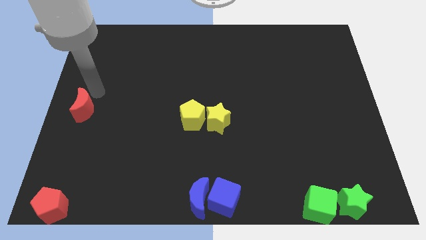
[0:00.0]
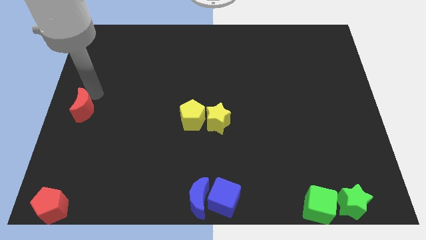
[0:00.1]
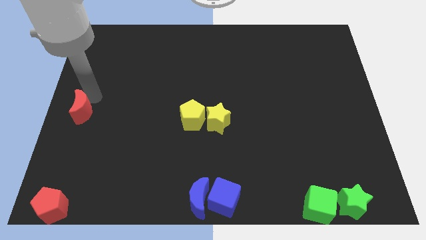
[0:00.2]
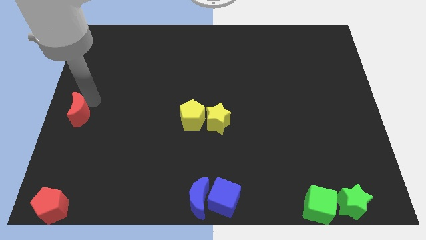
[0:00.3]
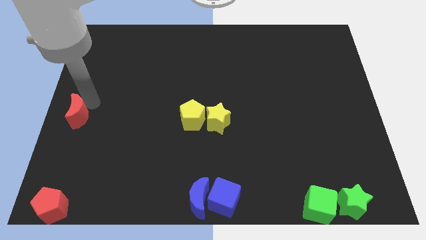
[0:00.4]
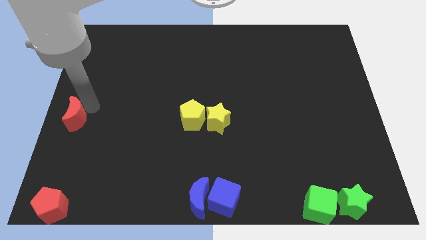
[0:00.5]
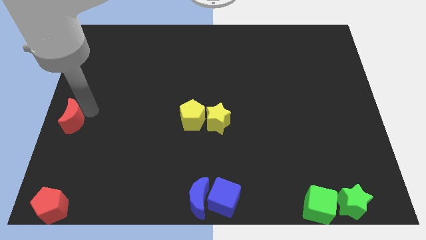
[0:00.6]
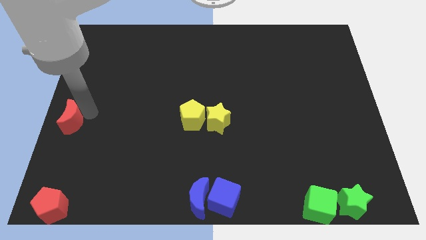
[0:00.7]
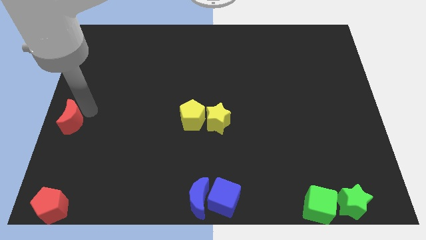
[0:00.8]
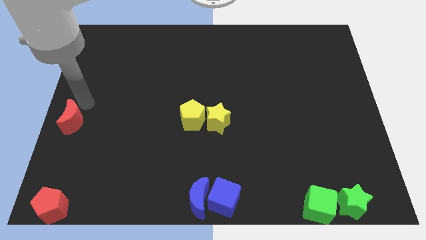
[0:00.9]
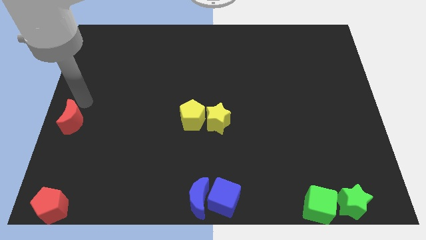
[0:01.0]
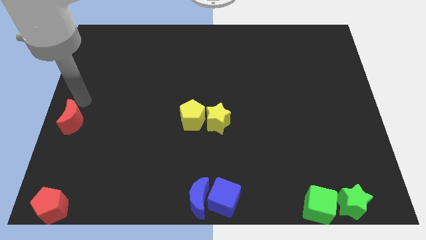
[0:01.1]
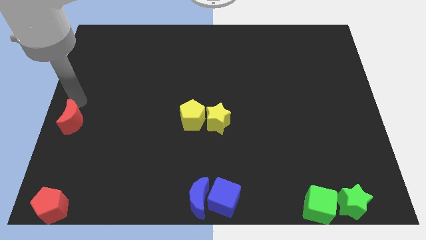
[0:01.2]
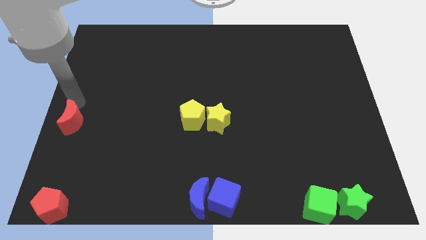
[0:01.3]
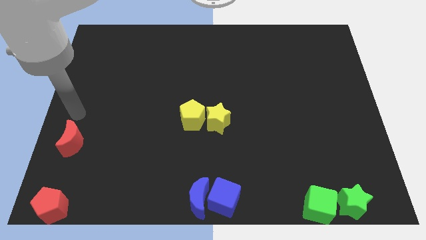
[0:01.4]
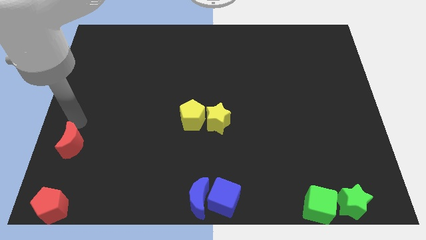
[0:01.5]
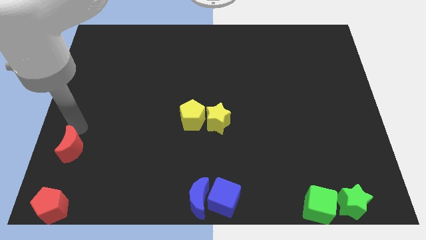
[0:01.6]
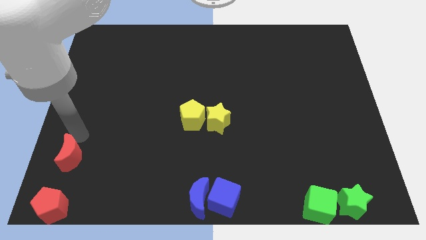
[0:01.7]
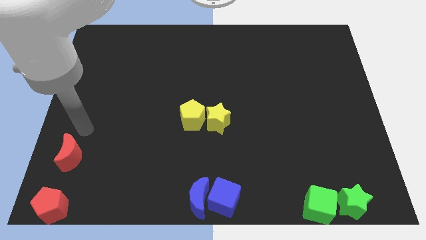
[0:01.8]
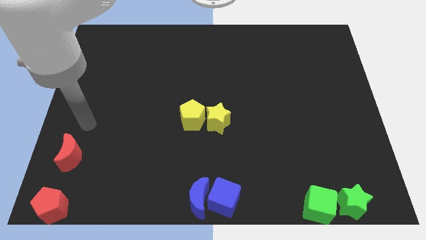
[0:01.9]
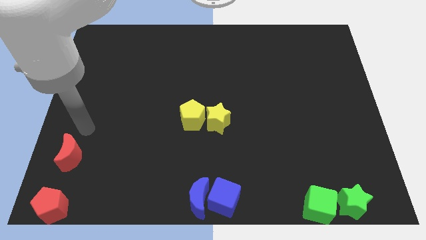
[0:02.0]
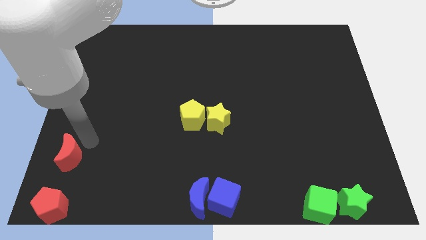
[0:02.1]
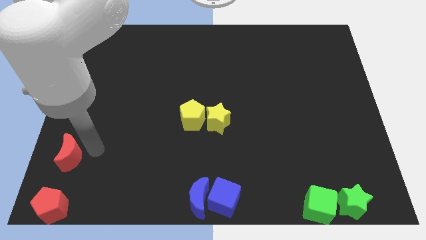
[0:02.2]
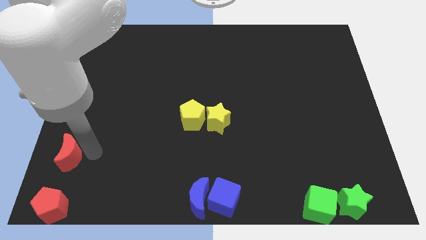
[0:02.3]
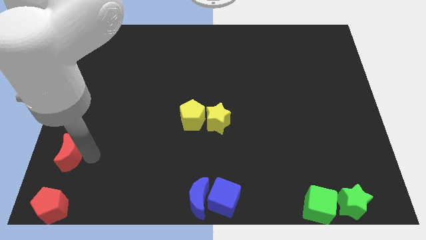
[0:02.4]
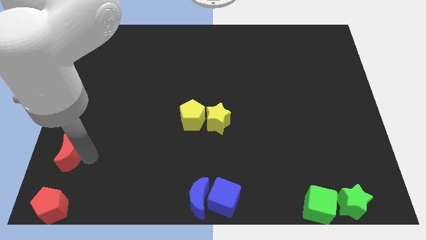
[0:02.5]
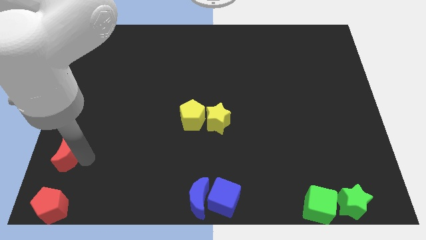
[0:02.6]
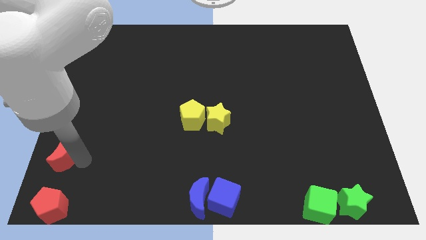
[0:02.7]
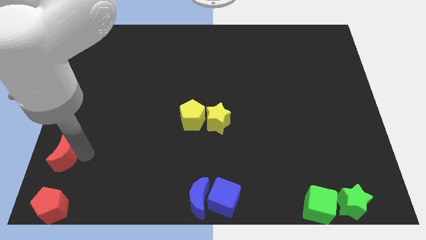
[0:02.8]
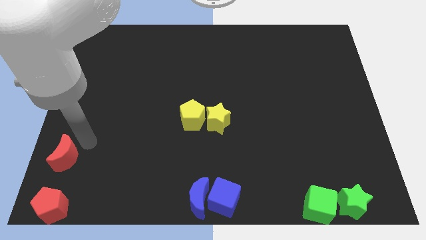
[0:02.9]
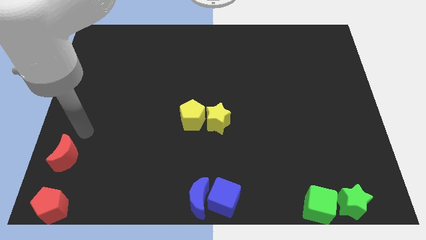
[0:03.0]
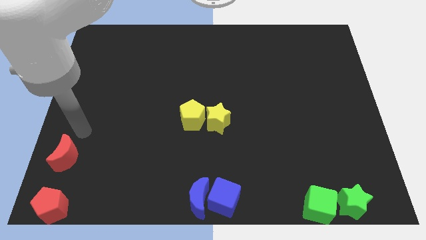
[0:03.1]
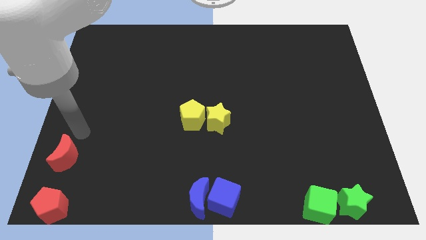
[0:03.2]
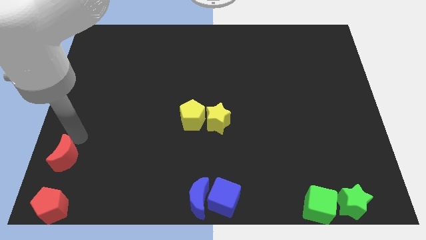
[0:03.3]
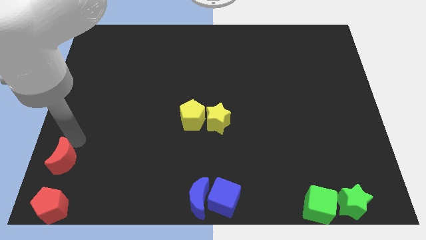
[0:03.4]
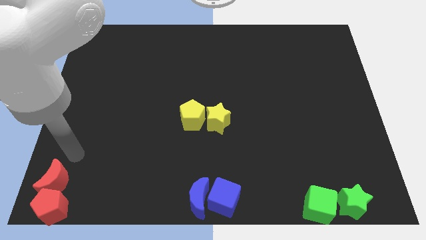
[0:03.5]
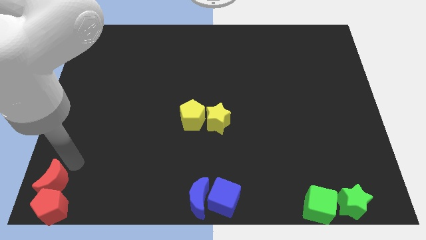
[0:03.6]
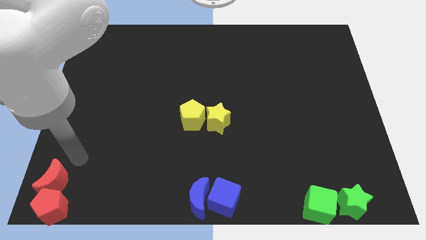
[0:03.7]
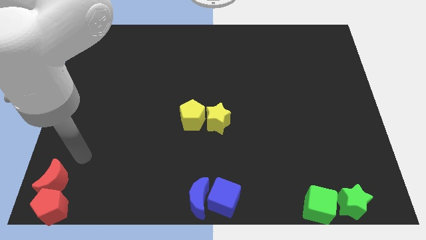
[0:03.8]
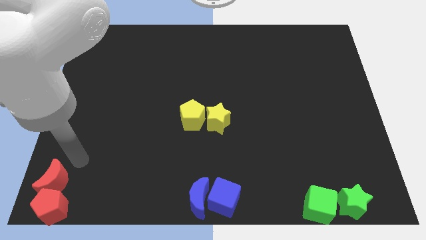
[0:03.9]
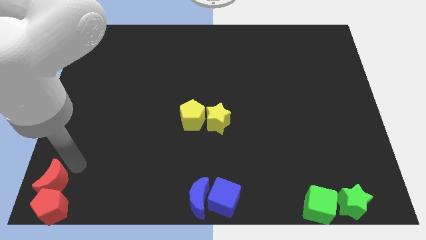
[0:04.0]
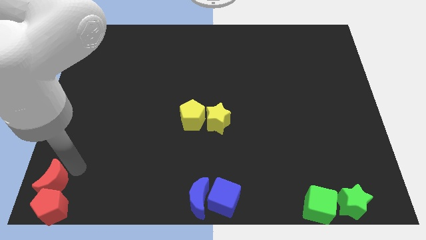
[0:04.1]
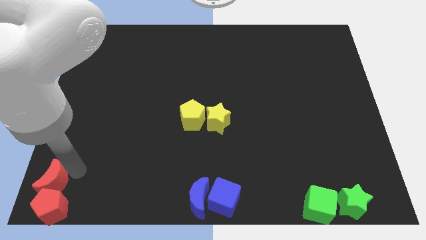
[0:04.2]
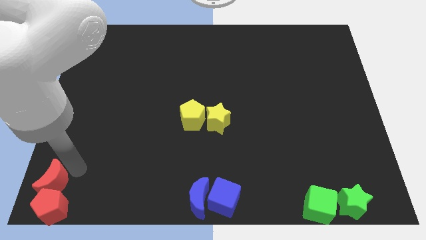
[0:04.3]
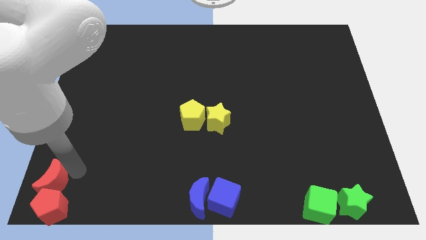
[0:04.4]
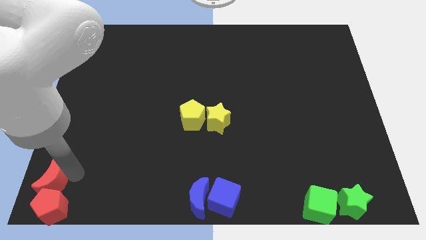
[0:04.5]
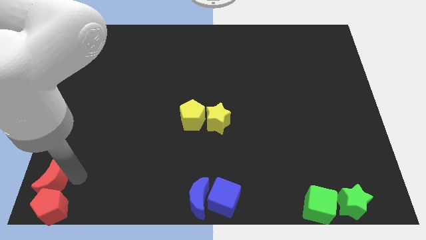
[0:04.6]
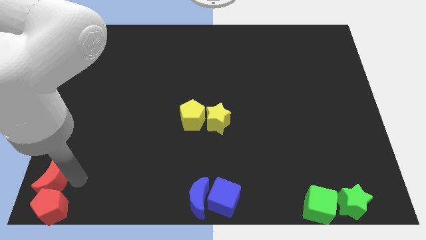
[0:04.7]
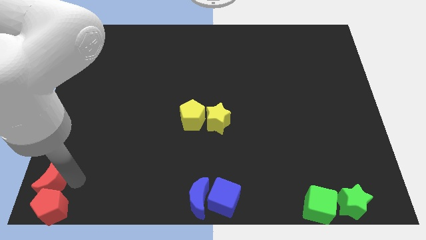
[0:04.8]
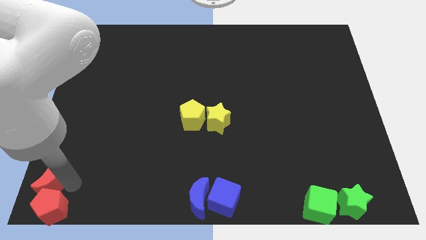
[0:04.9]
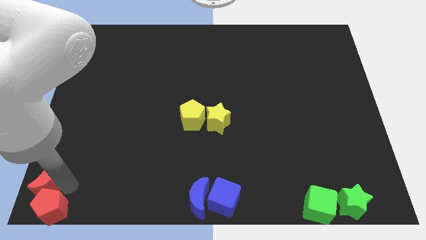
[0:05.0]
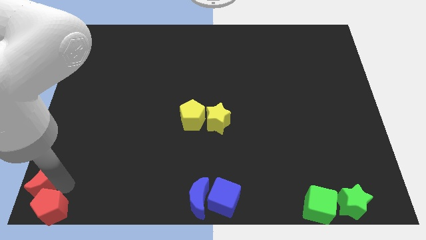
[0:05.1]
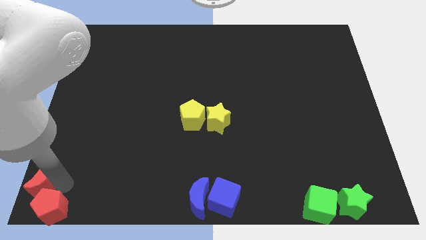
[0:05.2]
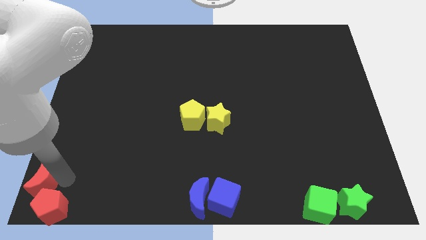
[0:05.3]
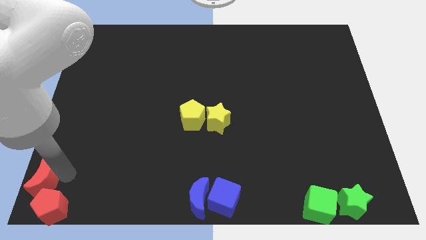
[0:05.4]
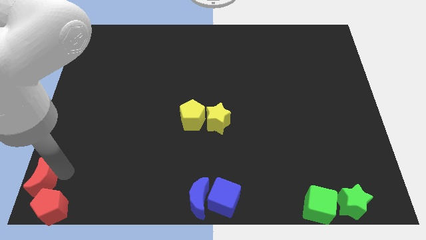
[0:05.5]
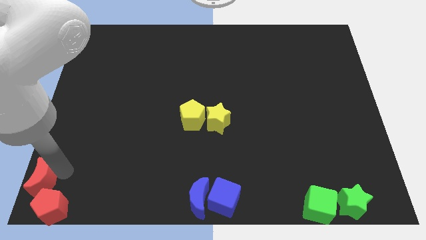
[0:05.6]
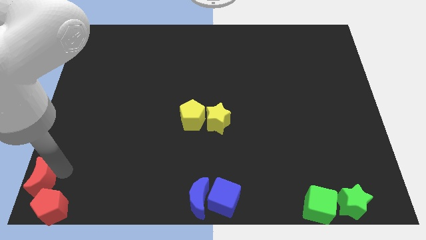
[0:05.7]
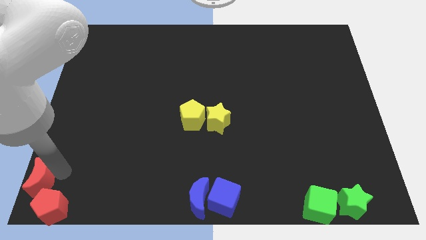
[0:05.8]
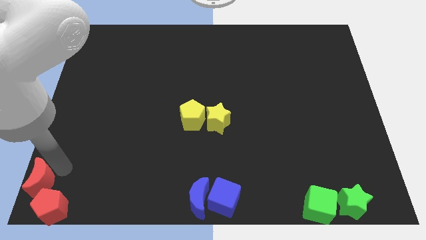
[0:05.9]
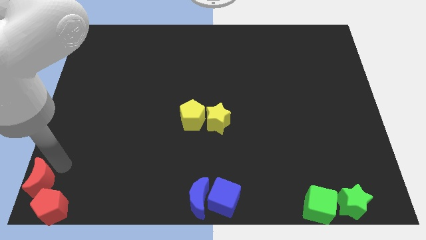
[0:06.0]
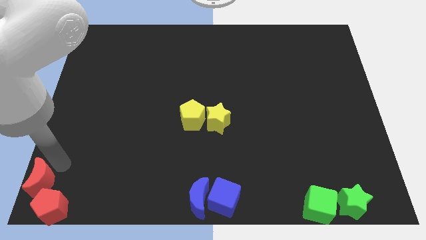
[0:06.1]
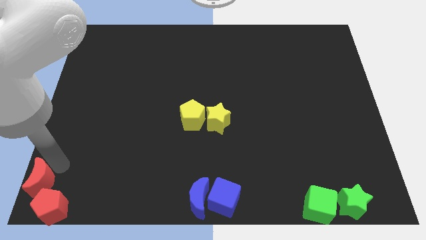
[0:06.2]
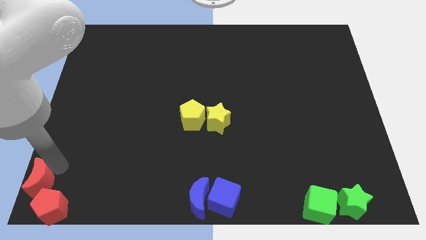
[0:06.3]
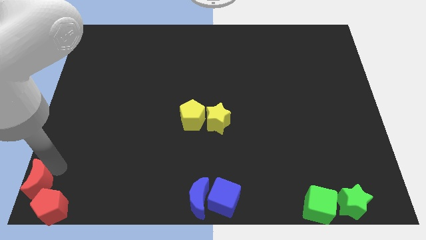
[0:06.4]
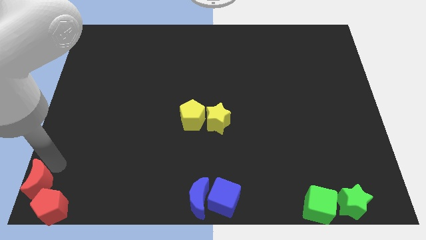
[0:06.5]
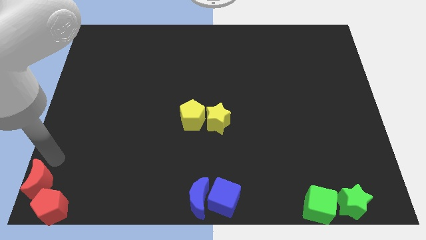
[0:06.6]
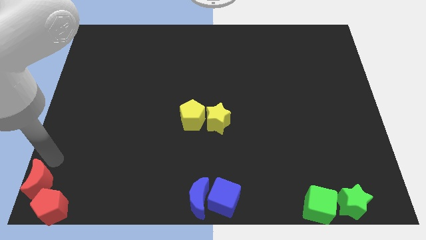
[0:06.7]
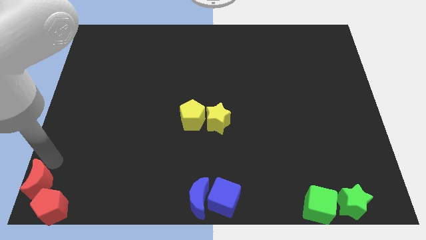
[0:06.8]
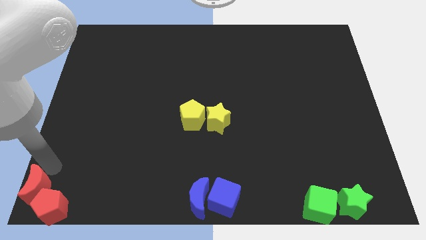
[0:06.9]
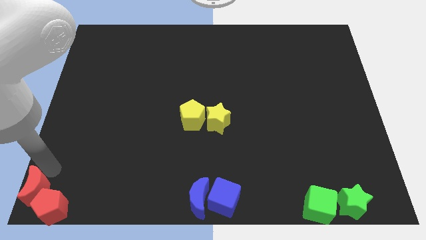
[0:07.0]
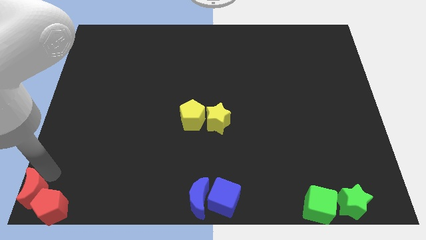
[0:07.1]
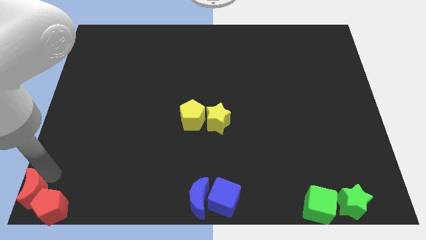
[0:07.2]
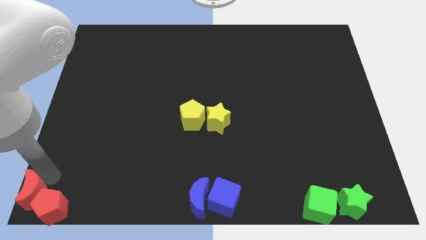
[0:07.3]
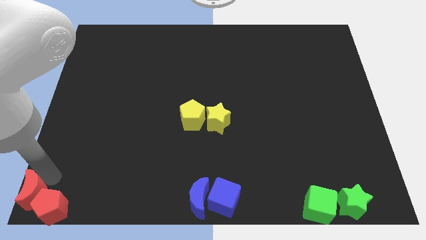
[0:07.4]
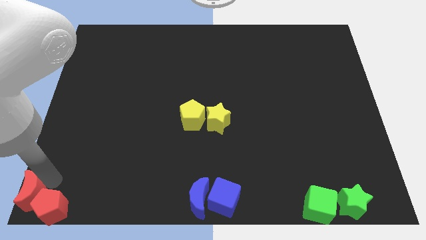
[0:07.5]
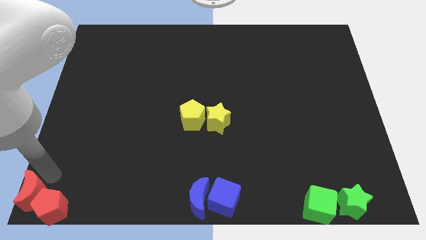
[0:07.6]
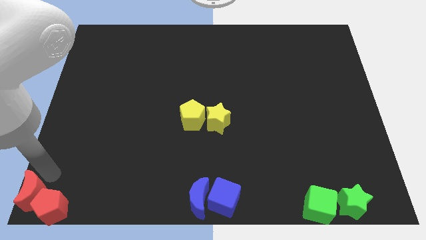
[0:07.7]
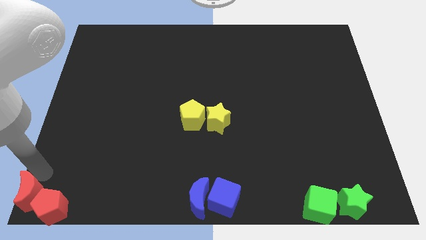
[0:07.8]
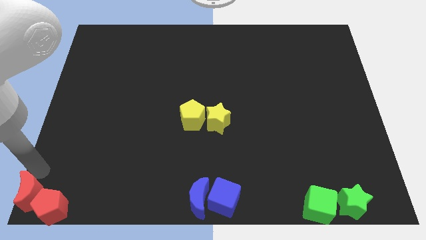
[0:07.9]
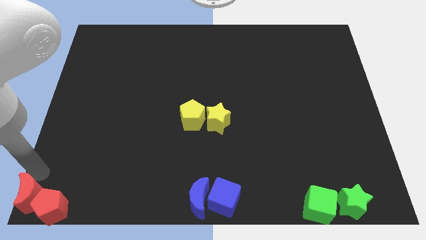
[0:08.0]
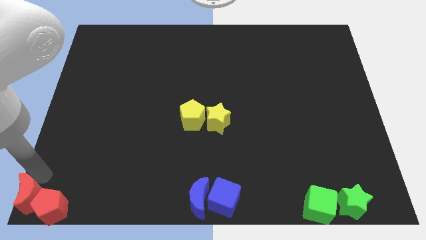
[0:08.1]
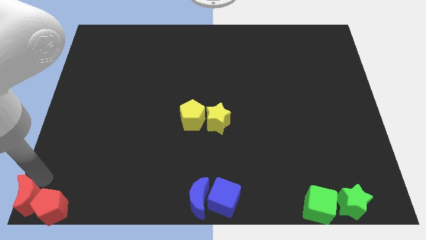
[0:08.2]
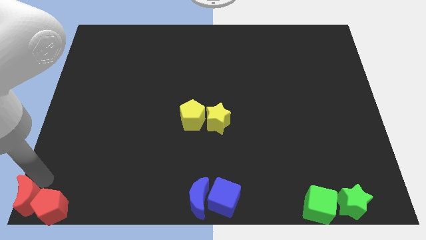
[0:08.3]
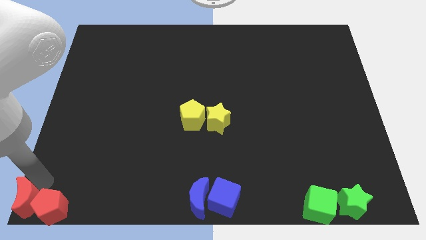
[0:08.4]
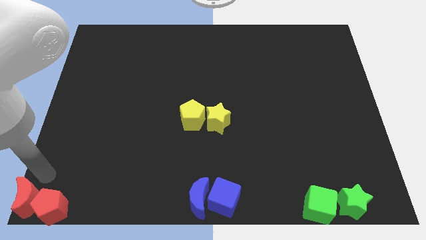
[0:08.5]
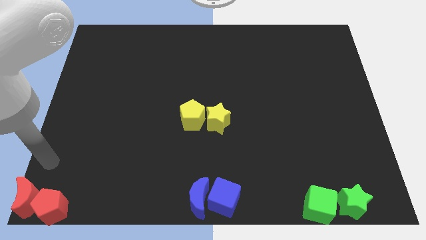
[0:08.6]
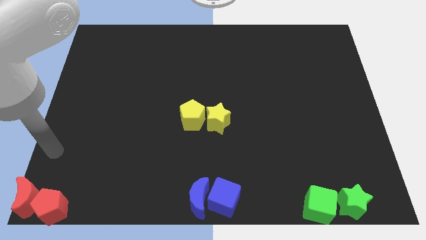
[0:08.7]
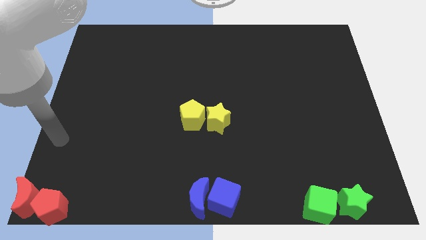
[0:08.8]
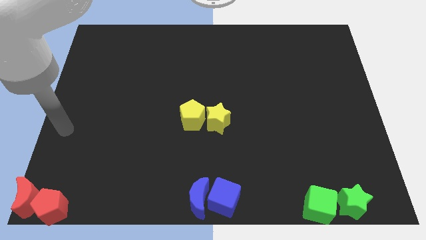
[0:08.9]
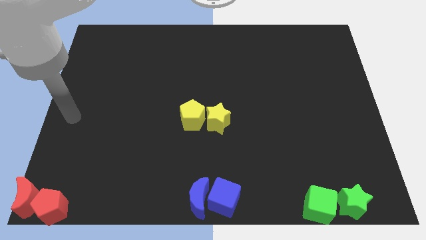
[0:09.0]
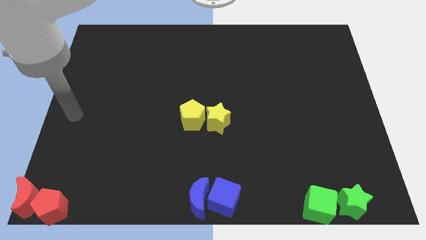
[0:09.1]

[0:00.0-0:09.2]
put the red moon at the bottom left corner of the board
